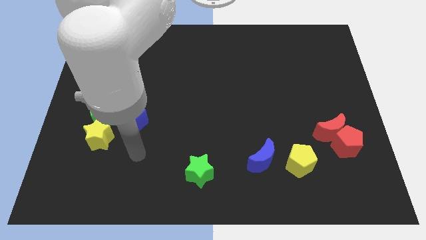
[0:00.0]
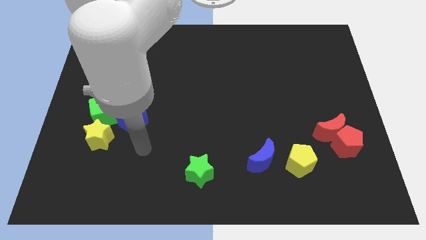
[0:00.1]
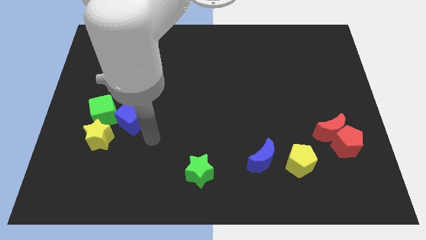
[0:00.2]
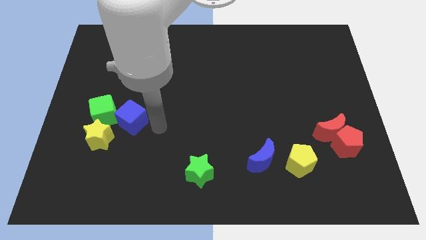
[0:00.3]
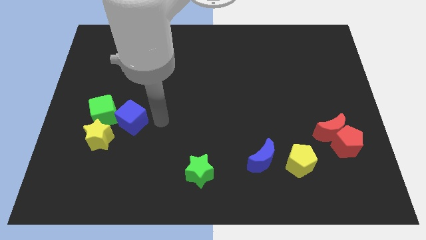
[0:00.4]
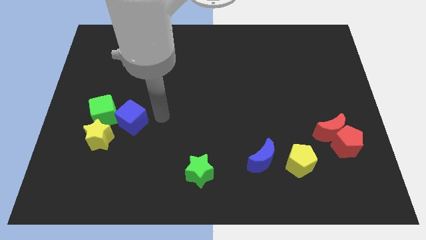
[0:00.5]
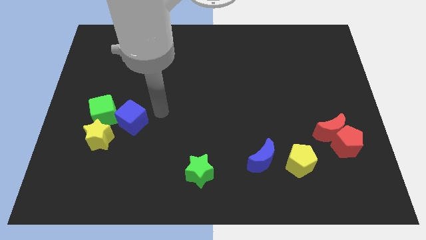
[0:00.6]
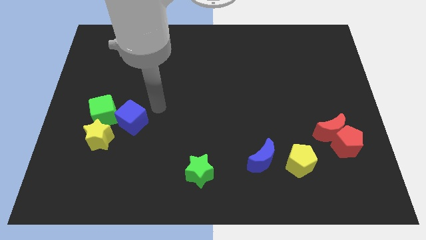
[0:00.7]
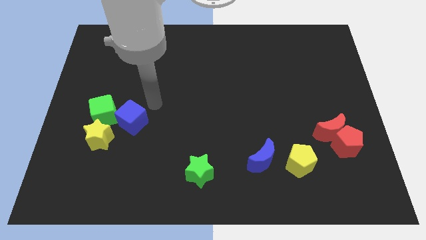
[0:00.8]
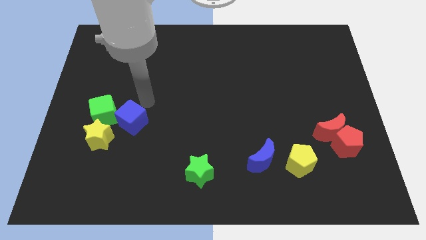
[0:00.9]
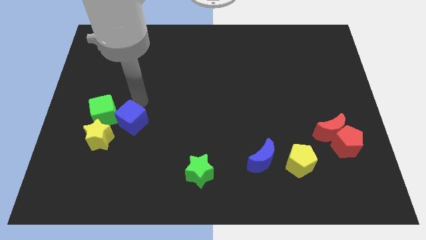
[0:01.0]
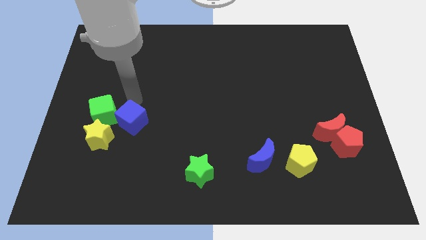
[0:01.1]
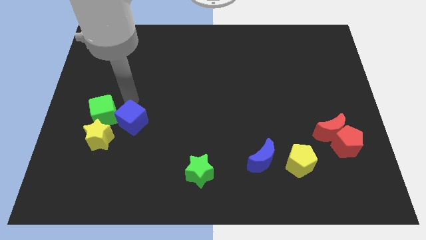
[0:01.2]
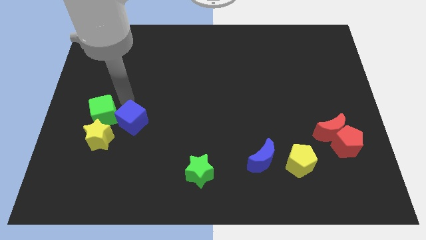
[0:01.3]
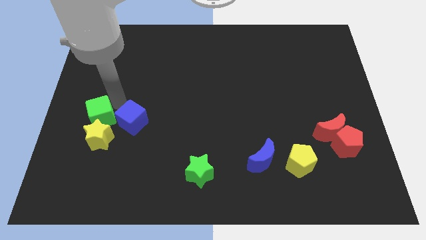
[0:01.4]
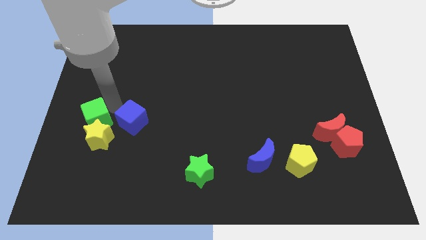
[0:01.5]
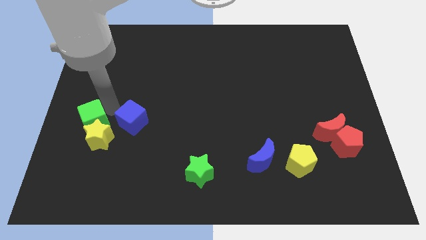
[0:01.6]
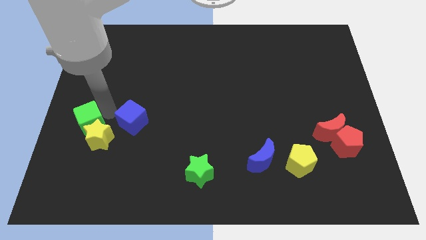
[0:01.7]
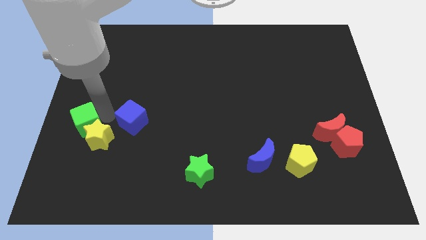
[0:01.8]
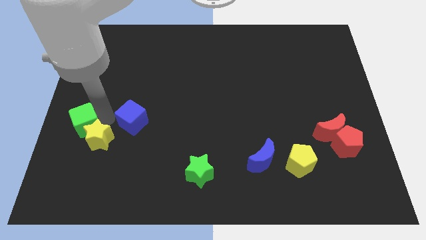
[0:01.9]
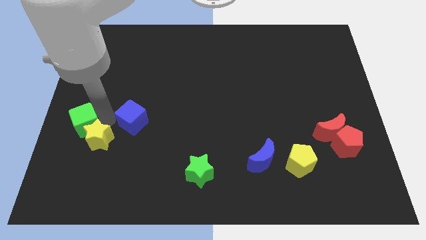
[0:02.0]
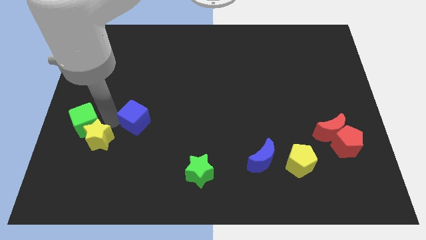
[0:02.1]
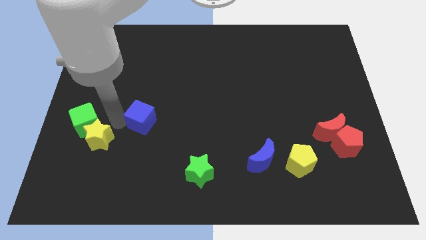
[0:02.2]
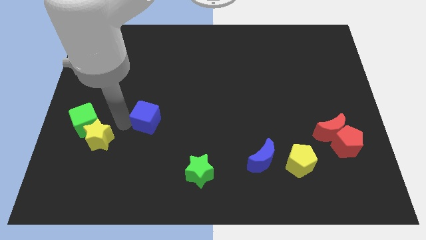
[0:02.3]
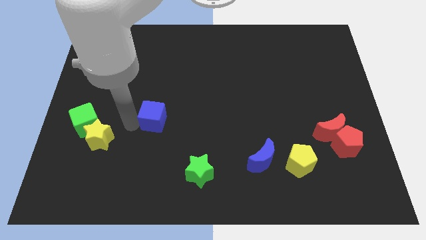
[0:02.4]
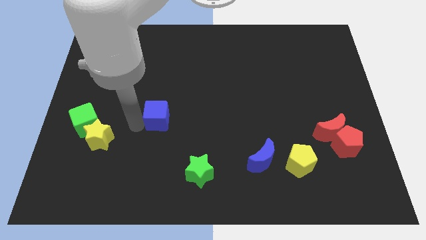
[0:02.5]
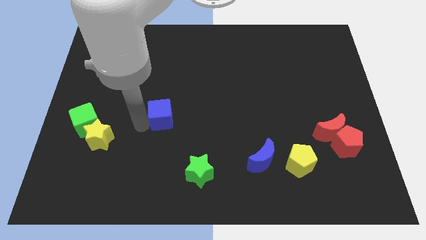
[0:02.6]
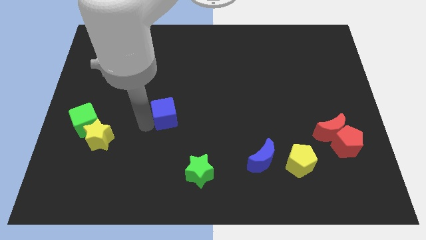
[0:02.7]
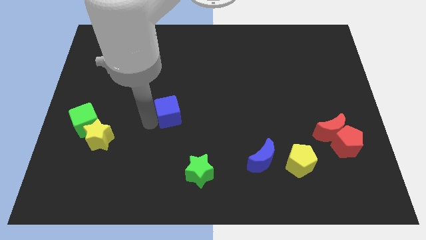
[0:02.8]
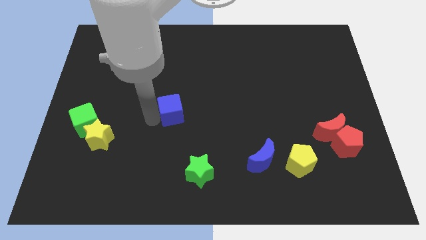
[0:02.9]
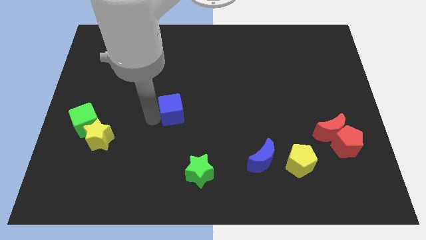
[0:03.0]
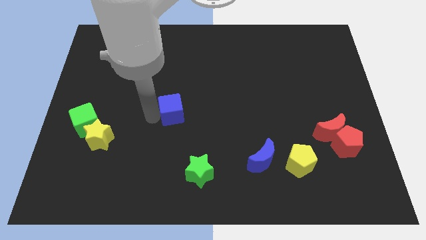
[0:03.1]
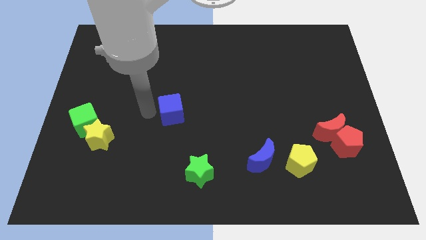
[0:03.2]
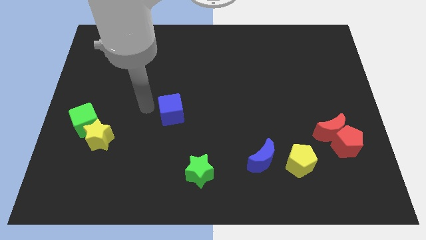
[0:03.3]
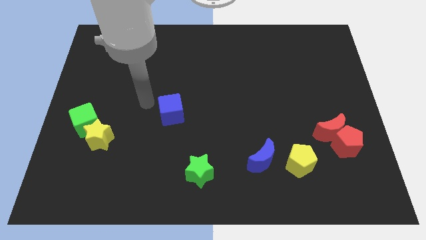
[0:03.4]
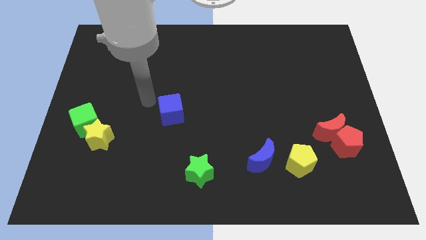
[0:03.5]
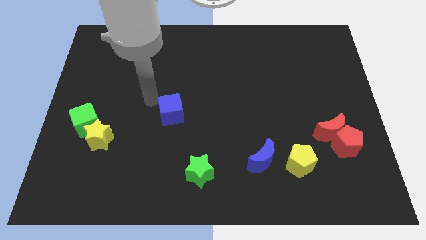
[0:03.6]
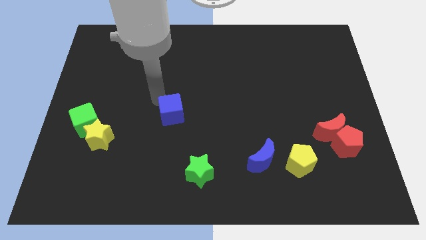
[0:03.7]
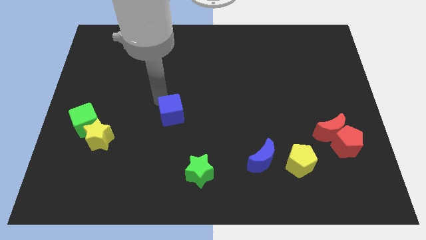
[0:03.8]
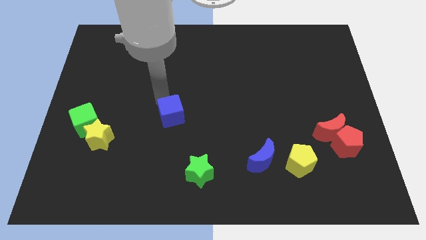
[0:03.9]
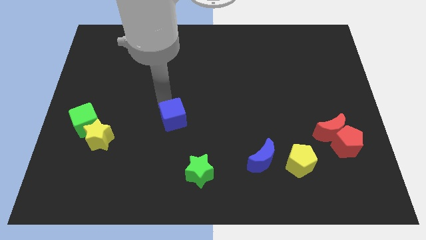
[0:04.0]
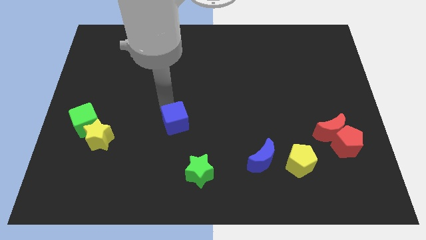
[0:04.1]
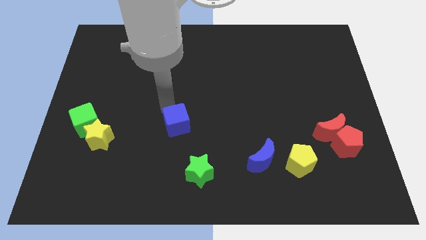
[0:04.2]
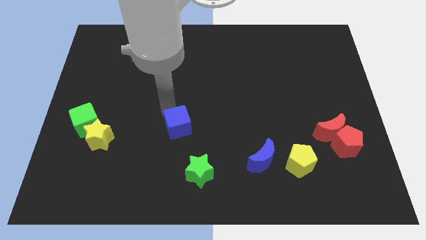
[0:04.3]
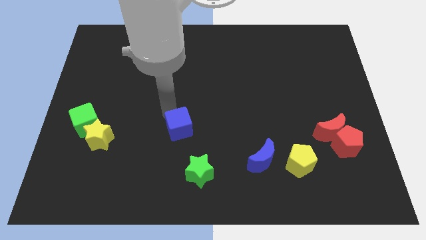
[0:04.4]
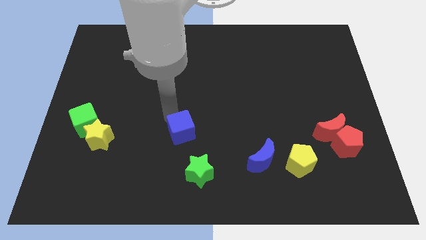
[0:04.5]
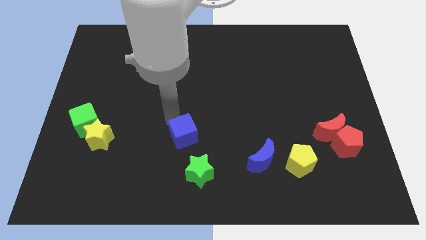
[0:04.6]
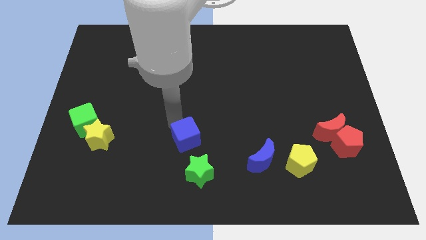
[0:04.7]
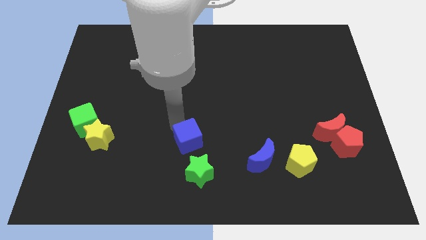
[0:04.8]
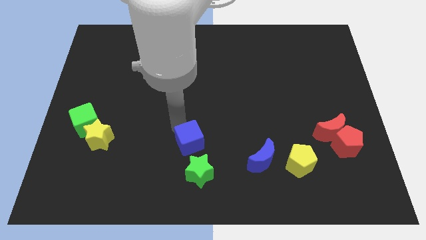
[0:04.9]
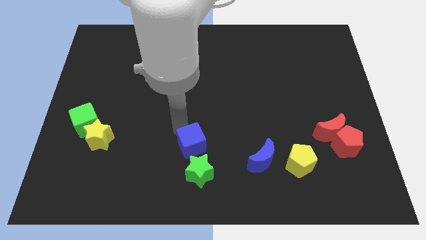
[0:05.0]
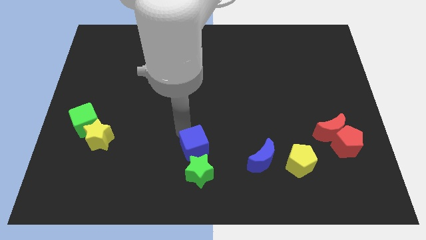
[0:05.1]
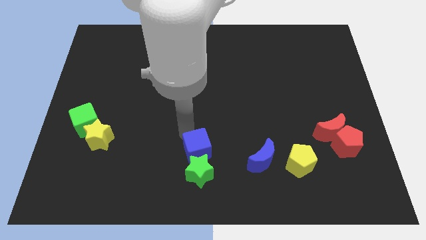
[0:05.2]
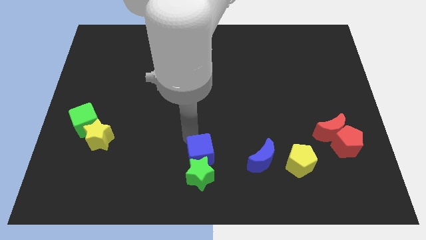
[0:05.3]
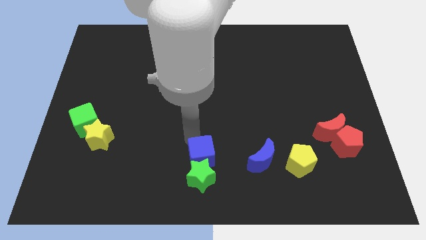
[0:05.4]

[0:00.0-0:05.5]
put the blue cube close to the green star

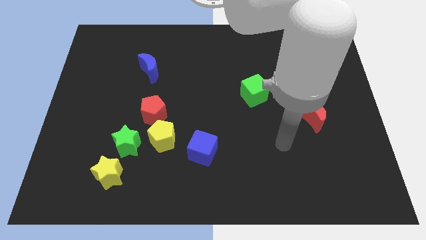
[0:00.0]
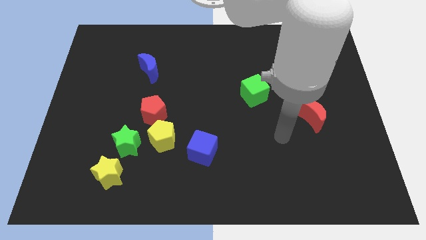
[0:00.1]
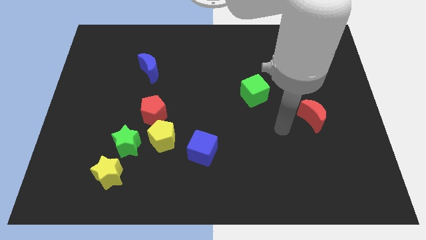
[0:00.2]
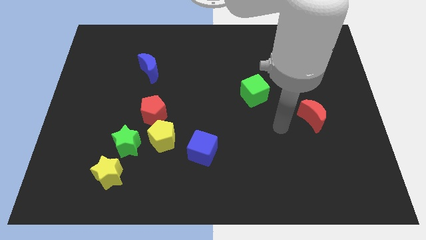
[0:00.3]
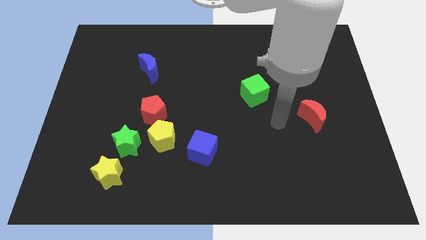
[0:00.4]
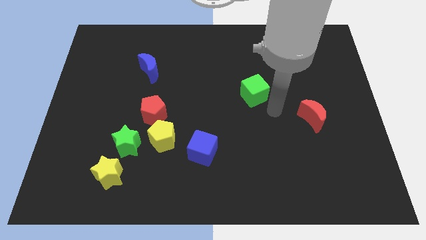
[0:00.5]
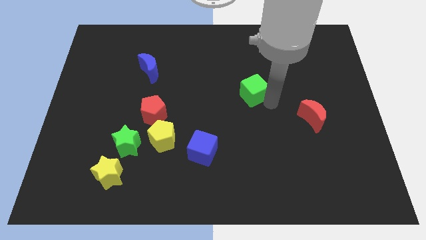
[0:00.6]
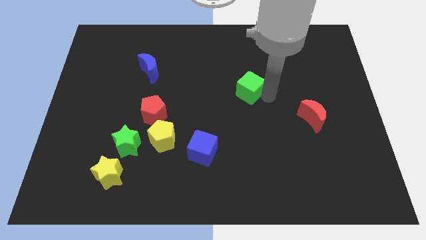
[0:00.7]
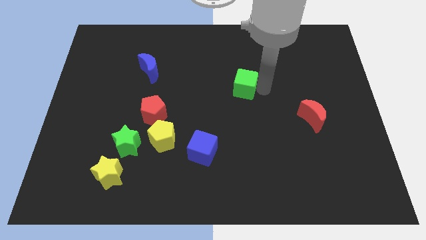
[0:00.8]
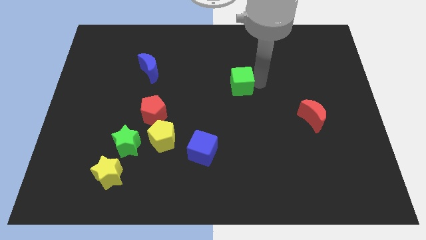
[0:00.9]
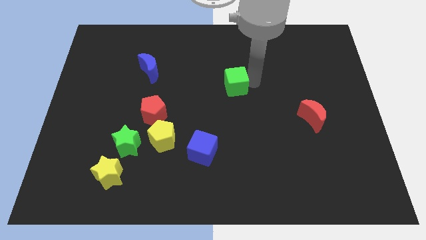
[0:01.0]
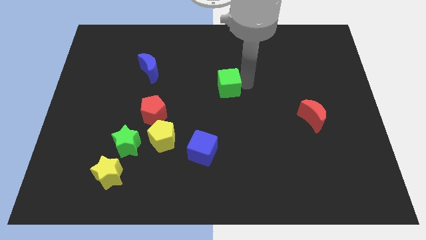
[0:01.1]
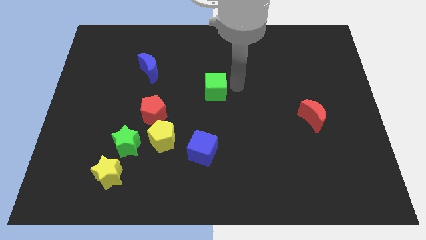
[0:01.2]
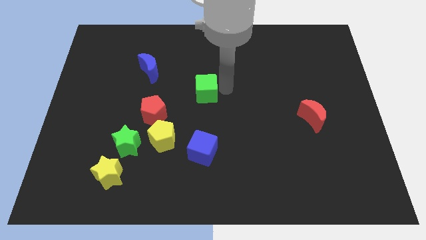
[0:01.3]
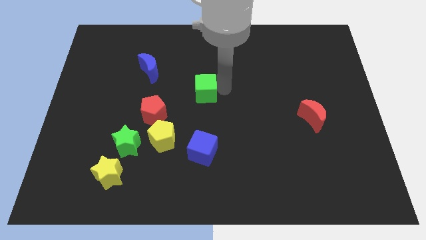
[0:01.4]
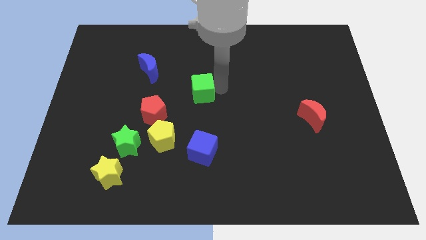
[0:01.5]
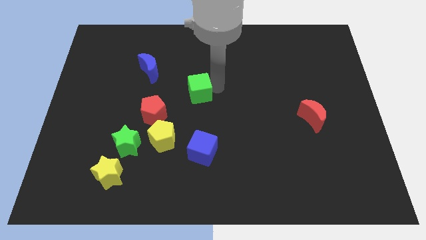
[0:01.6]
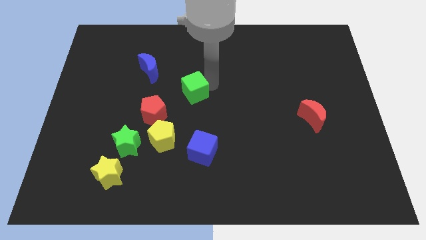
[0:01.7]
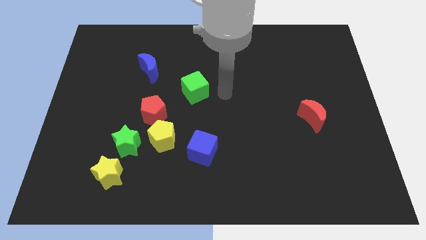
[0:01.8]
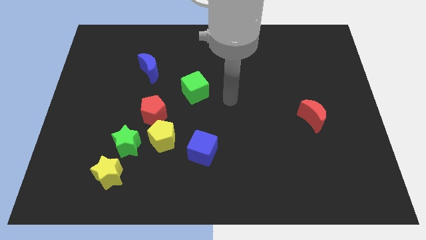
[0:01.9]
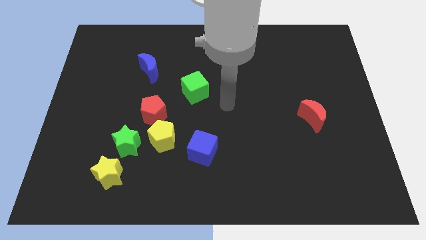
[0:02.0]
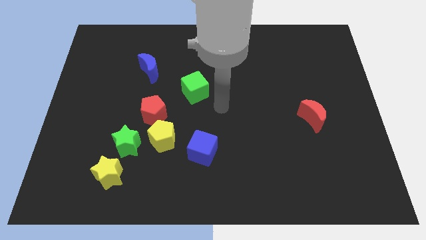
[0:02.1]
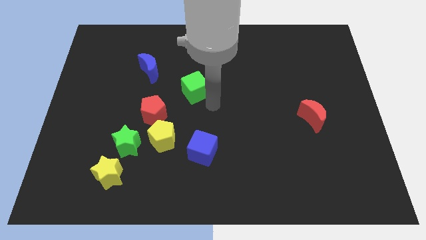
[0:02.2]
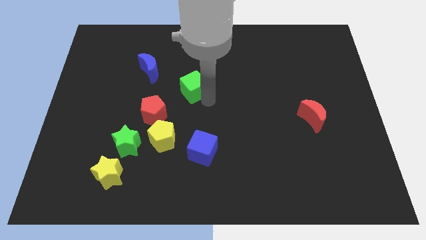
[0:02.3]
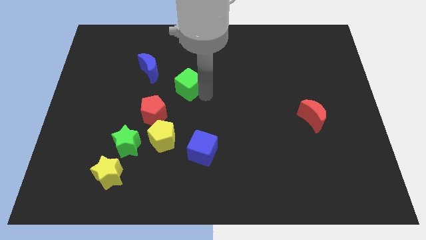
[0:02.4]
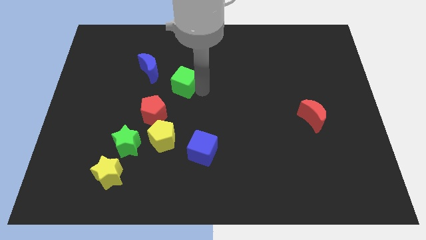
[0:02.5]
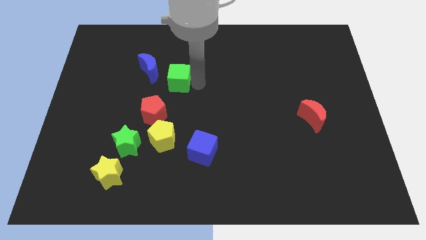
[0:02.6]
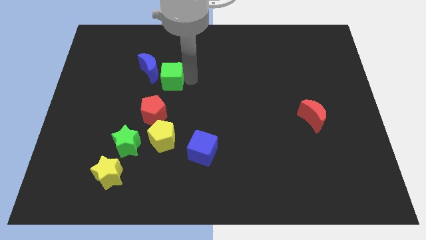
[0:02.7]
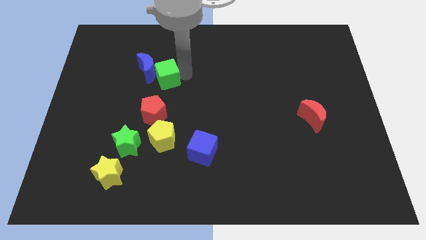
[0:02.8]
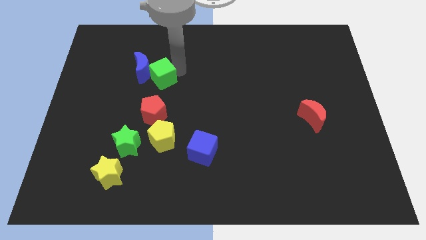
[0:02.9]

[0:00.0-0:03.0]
slide the green cube next to the blue moon

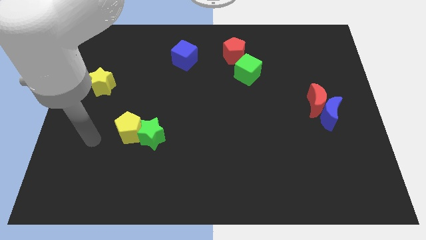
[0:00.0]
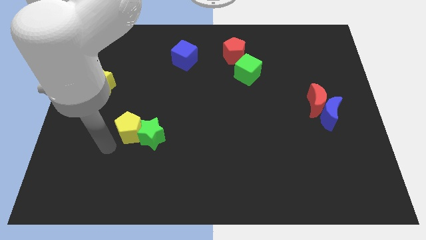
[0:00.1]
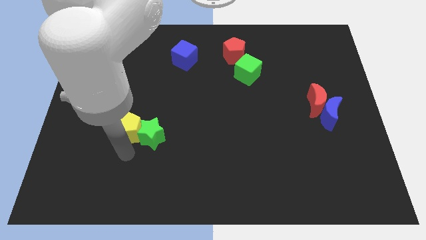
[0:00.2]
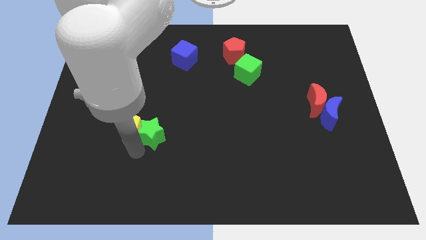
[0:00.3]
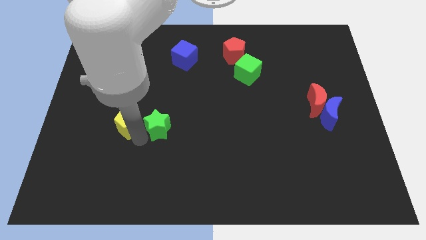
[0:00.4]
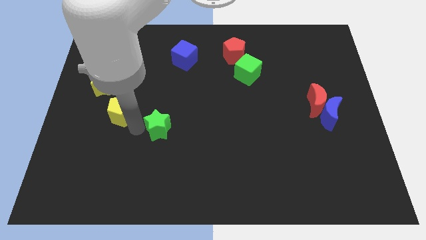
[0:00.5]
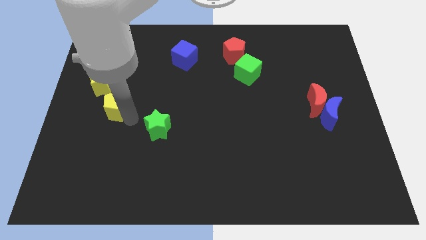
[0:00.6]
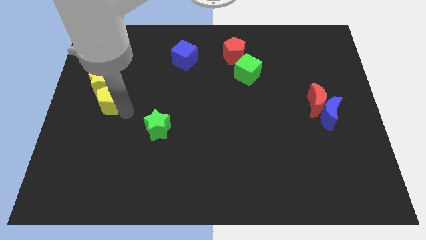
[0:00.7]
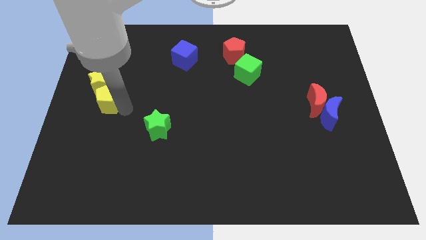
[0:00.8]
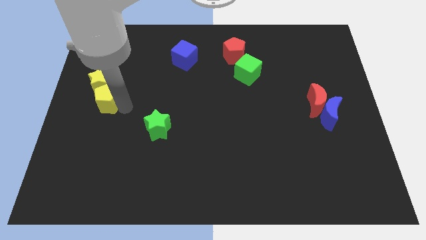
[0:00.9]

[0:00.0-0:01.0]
put the yellow pentagon close to the yellow star
